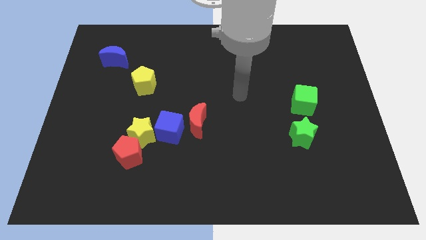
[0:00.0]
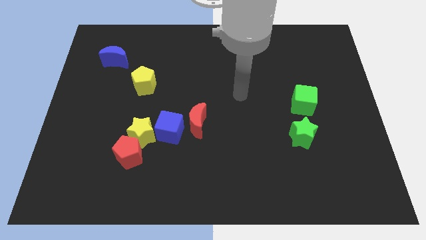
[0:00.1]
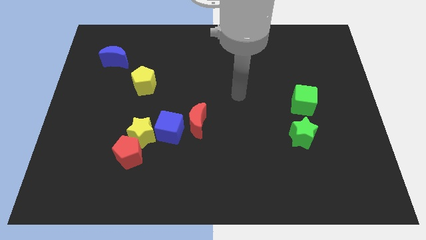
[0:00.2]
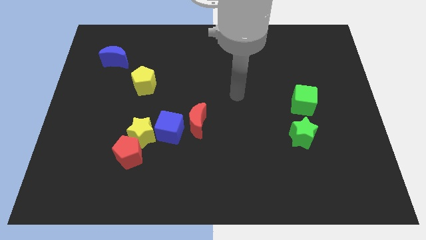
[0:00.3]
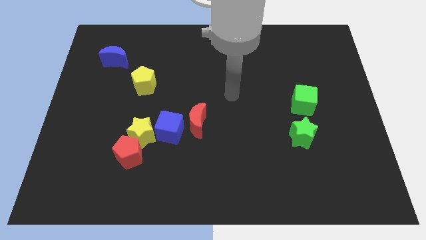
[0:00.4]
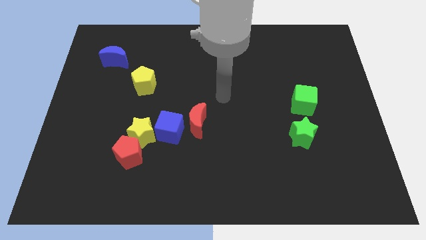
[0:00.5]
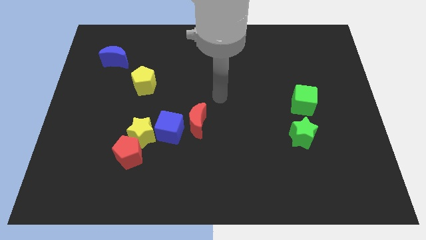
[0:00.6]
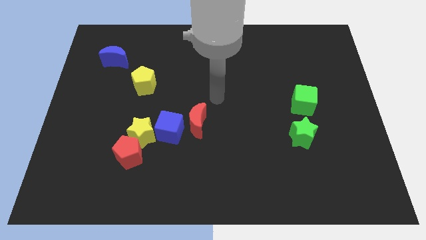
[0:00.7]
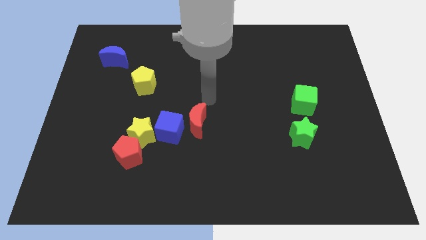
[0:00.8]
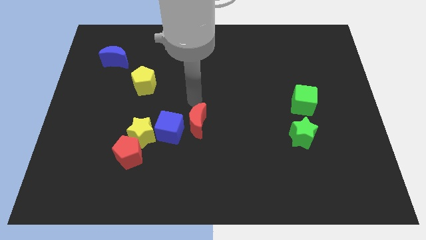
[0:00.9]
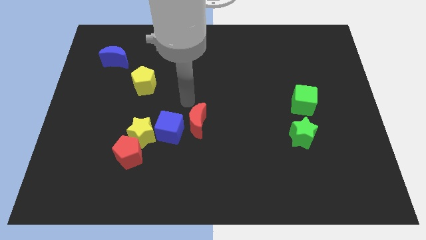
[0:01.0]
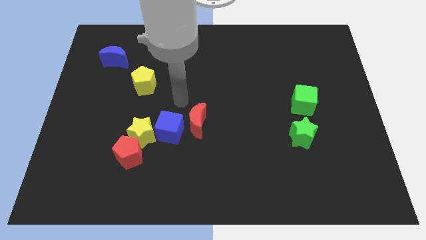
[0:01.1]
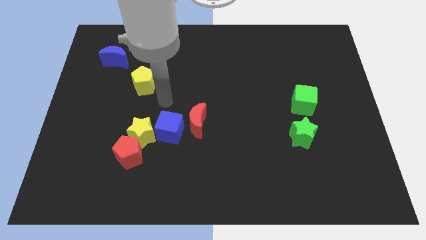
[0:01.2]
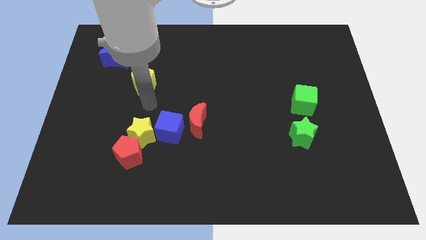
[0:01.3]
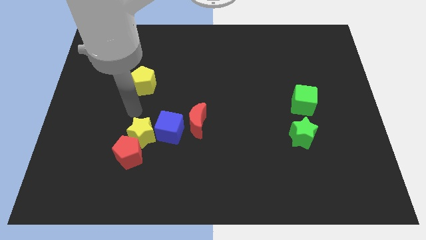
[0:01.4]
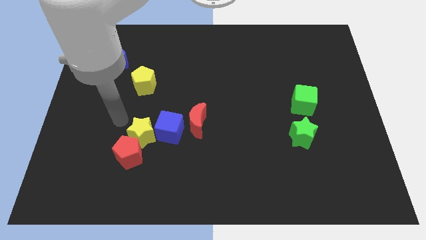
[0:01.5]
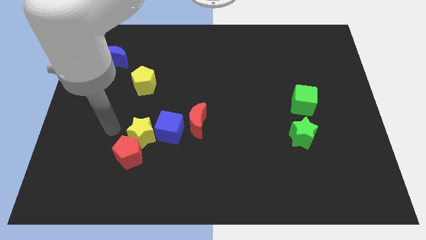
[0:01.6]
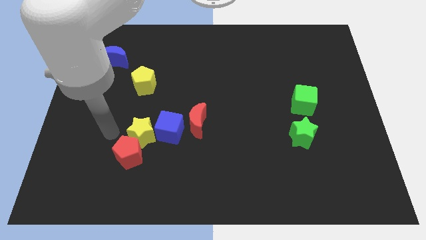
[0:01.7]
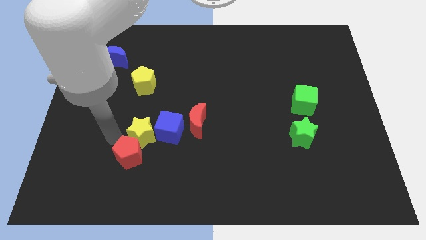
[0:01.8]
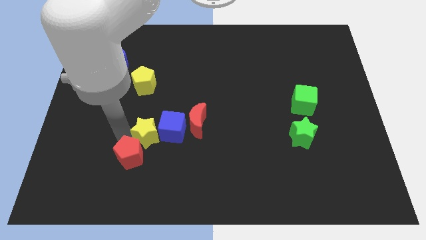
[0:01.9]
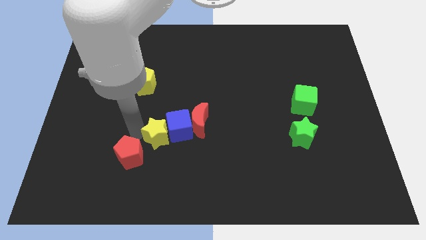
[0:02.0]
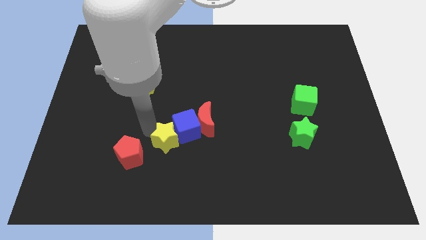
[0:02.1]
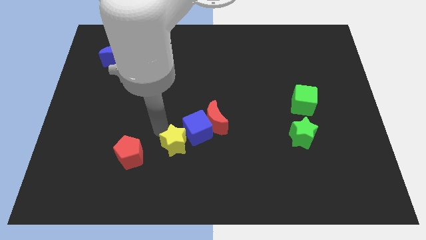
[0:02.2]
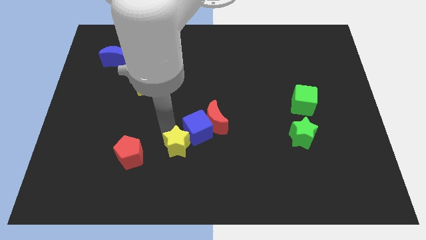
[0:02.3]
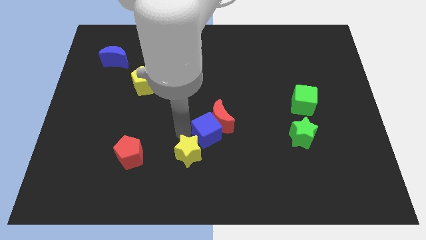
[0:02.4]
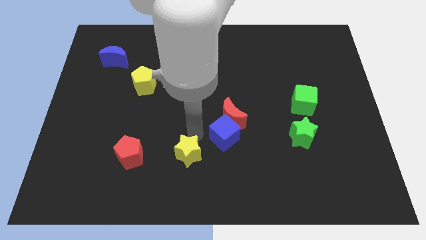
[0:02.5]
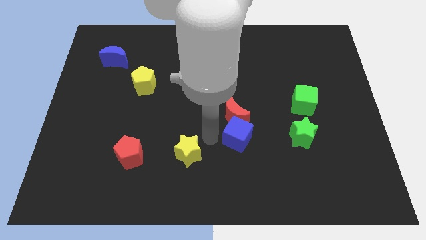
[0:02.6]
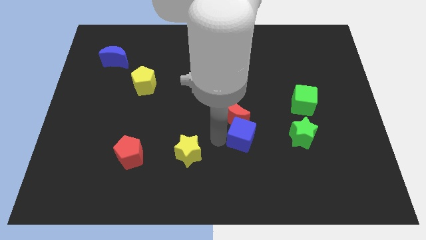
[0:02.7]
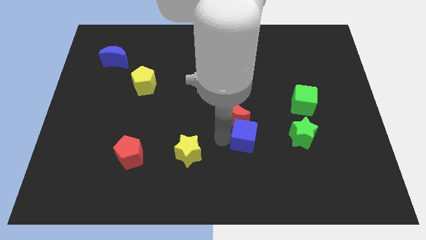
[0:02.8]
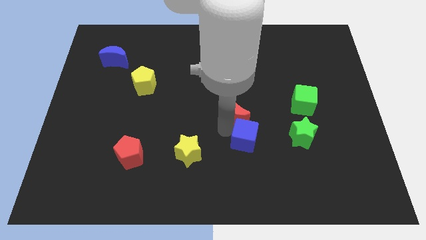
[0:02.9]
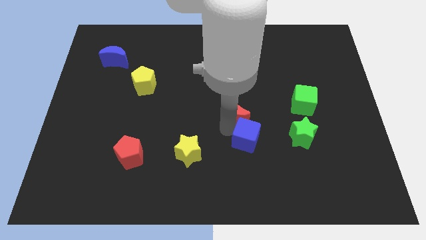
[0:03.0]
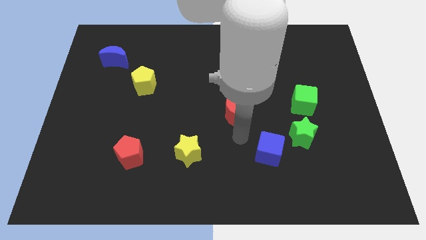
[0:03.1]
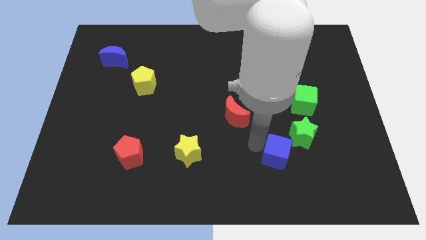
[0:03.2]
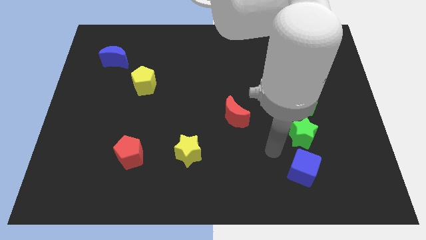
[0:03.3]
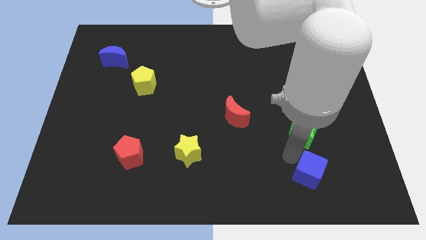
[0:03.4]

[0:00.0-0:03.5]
move the blue cube to the bottom side of the green star

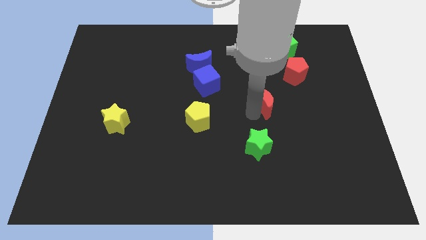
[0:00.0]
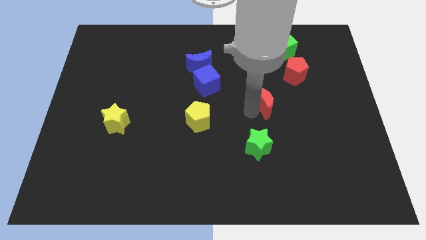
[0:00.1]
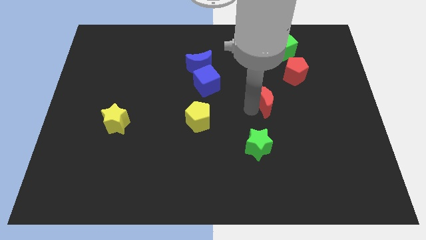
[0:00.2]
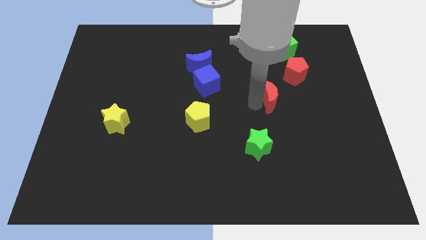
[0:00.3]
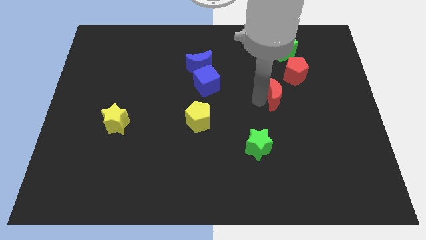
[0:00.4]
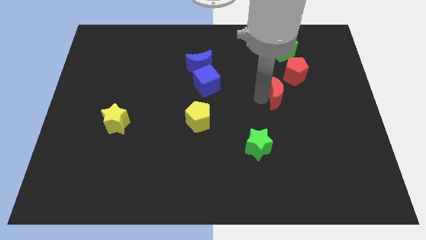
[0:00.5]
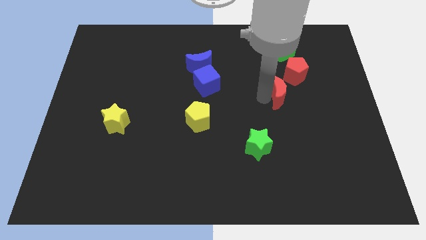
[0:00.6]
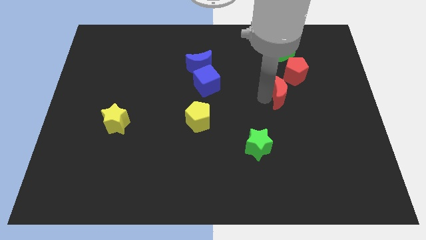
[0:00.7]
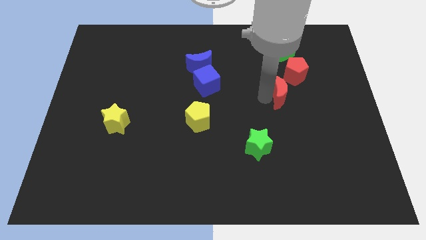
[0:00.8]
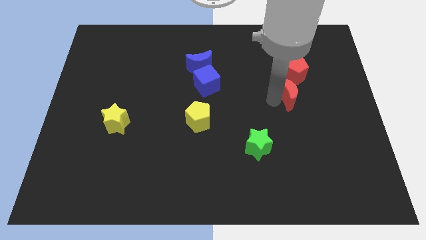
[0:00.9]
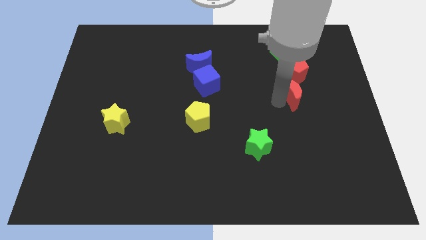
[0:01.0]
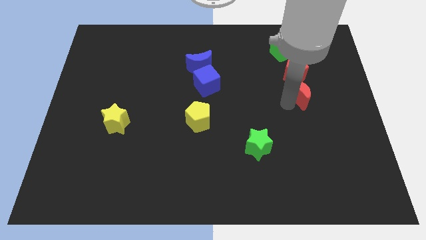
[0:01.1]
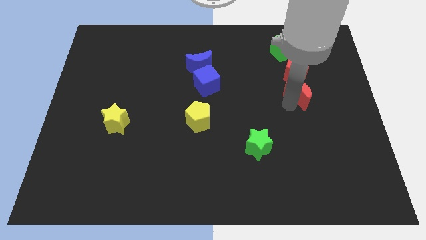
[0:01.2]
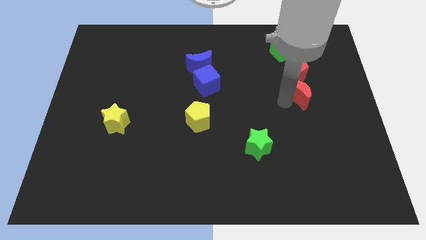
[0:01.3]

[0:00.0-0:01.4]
place the red moon below red pentagon

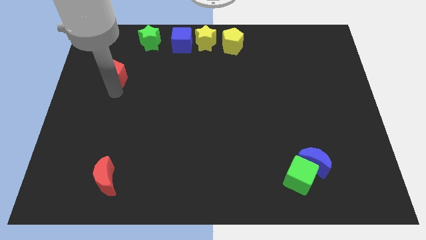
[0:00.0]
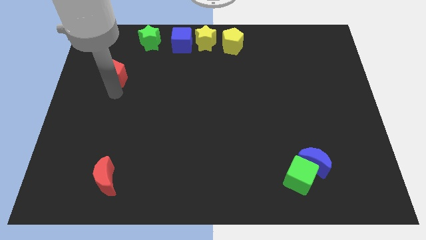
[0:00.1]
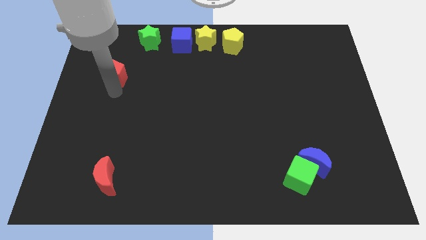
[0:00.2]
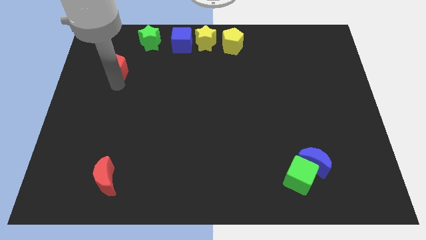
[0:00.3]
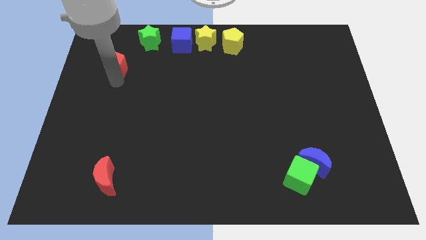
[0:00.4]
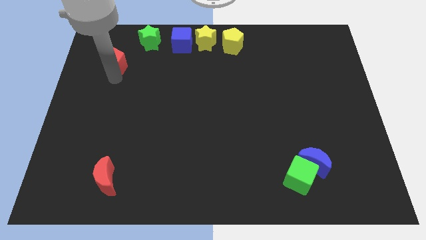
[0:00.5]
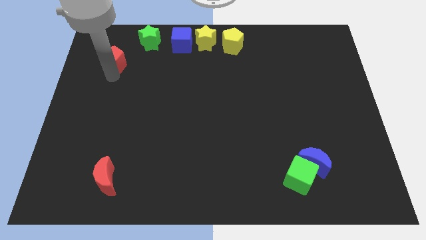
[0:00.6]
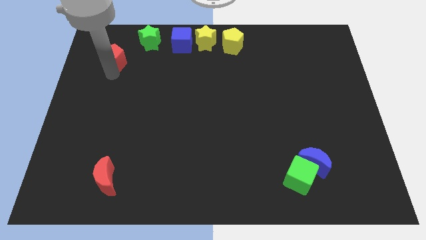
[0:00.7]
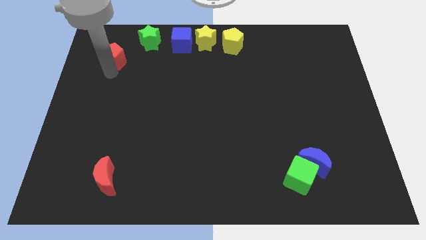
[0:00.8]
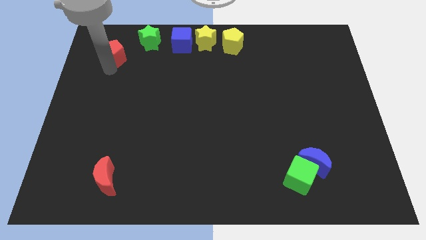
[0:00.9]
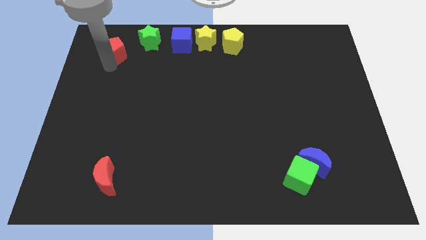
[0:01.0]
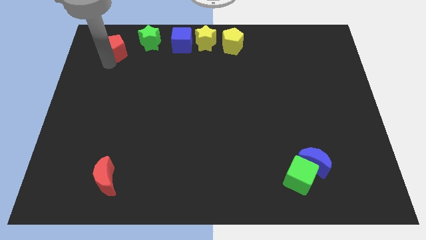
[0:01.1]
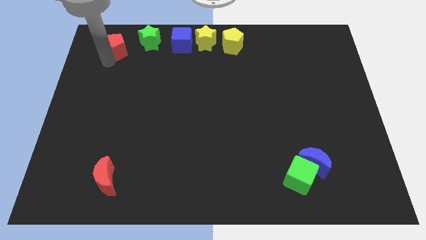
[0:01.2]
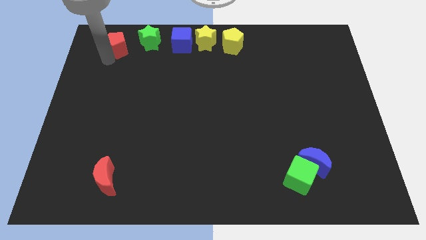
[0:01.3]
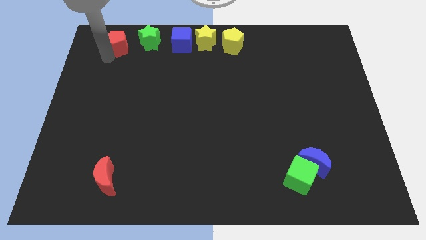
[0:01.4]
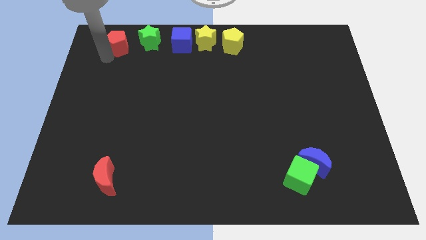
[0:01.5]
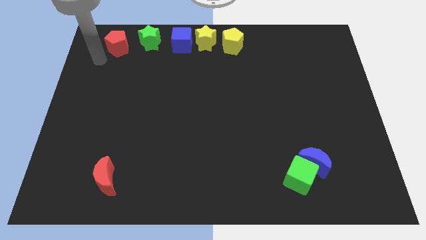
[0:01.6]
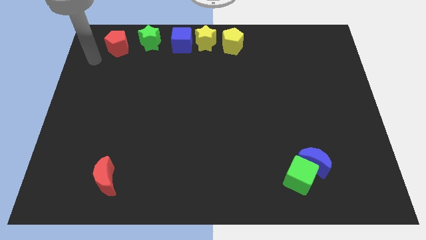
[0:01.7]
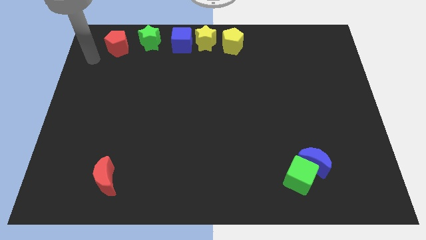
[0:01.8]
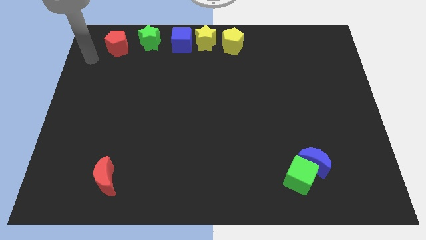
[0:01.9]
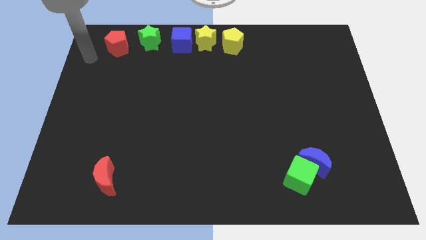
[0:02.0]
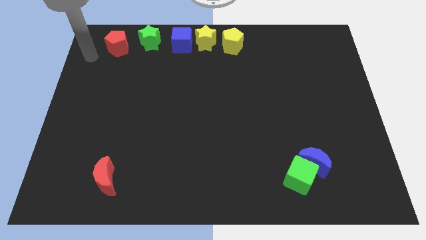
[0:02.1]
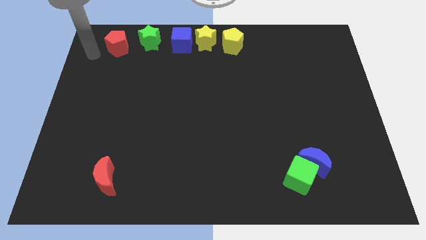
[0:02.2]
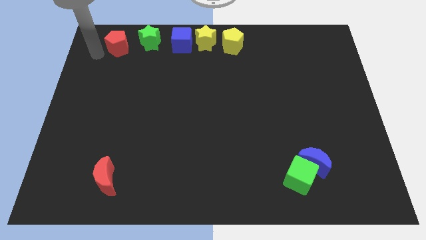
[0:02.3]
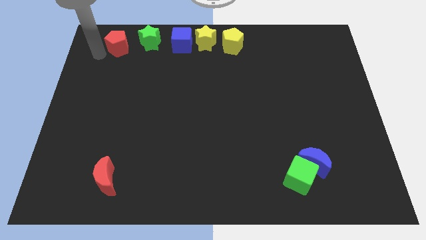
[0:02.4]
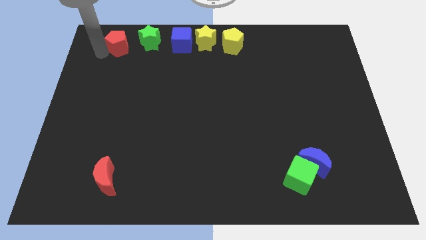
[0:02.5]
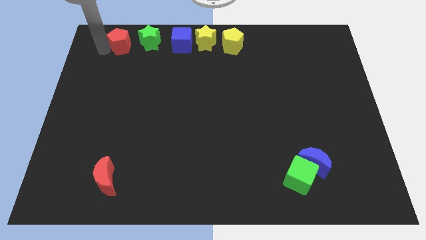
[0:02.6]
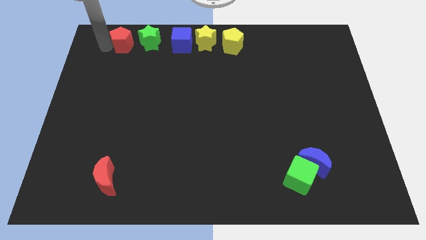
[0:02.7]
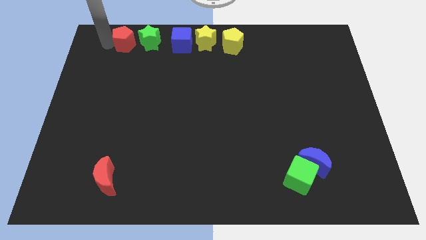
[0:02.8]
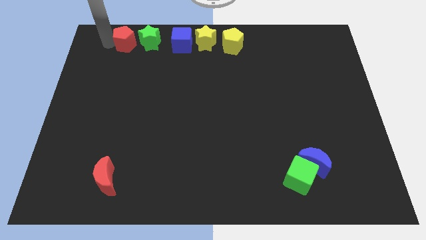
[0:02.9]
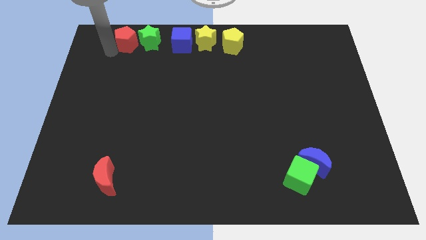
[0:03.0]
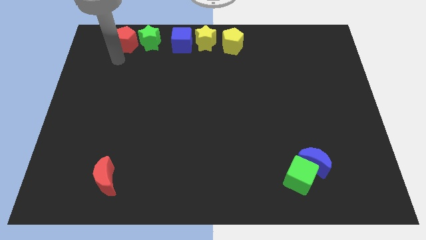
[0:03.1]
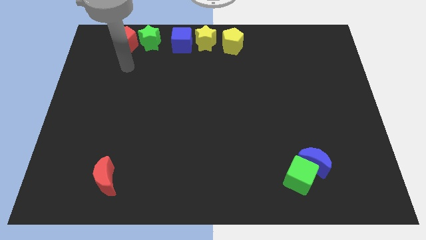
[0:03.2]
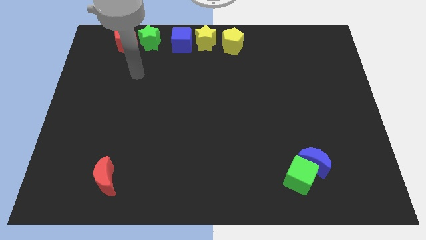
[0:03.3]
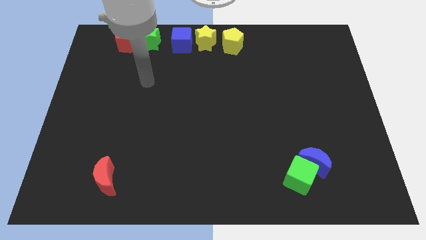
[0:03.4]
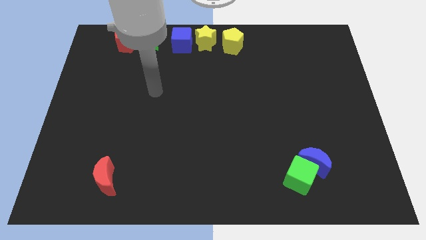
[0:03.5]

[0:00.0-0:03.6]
place the red pentagon left to the green star

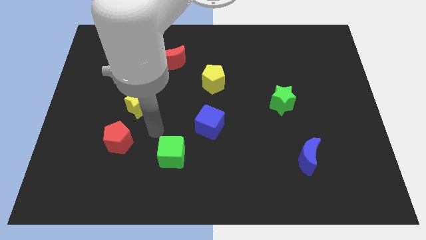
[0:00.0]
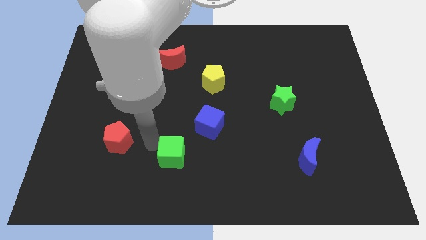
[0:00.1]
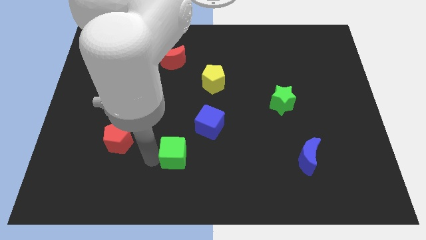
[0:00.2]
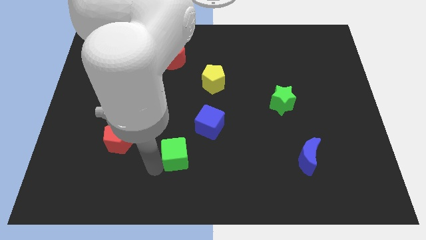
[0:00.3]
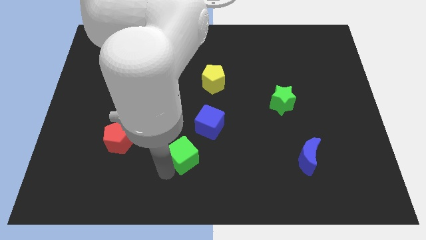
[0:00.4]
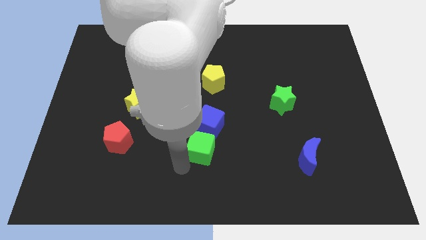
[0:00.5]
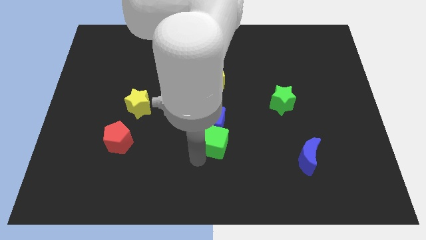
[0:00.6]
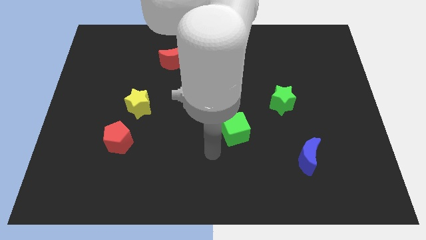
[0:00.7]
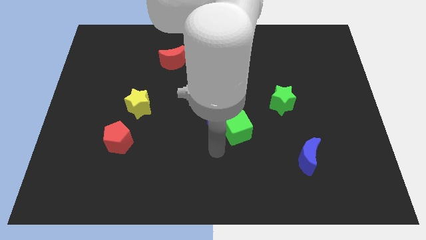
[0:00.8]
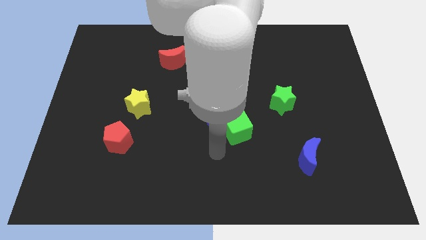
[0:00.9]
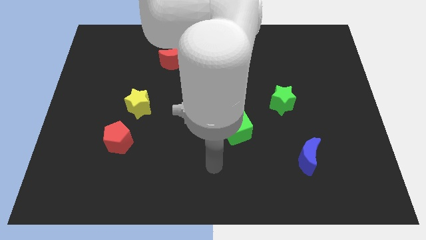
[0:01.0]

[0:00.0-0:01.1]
place the green cube to the center
